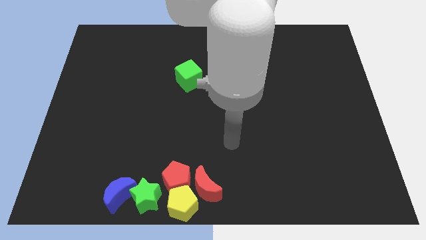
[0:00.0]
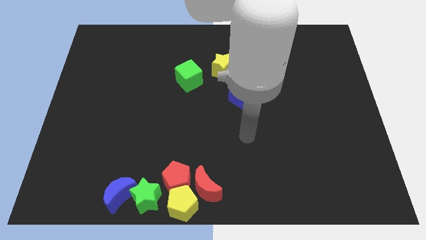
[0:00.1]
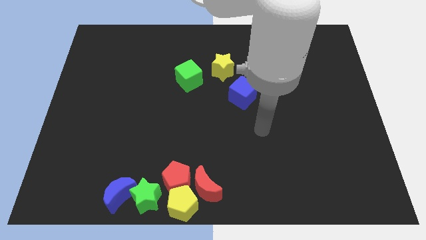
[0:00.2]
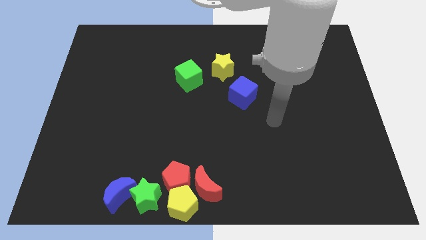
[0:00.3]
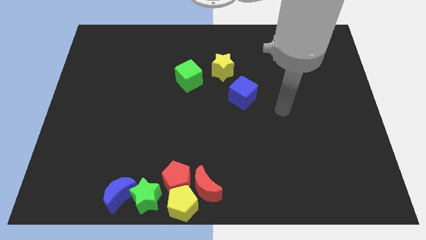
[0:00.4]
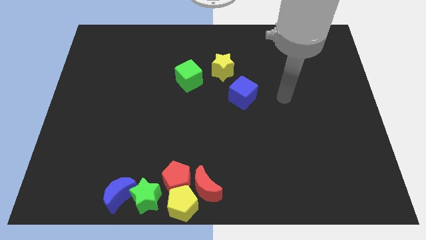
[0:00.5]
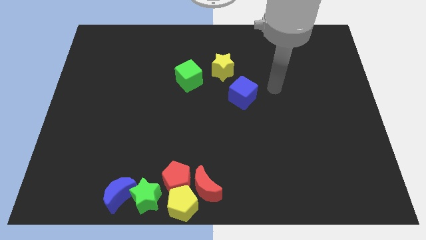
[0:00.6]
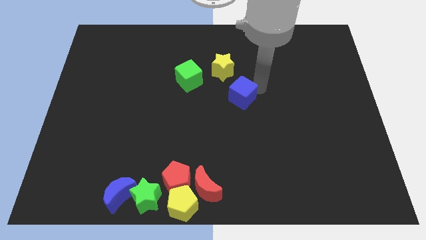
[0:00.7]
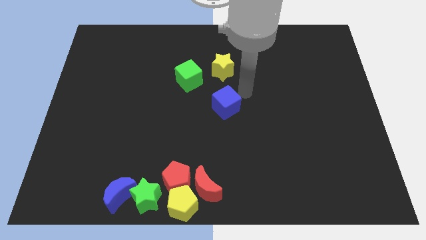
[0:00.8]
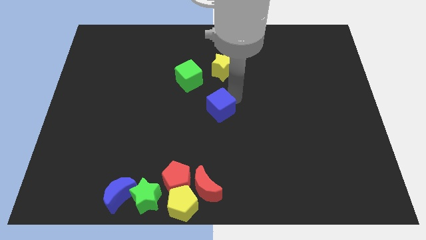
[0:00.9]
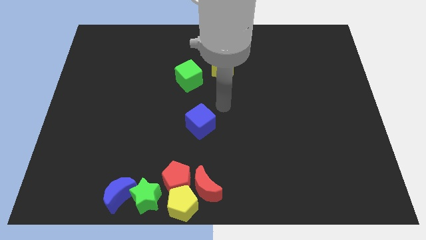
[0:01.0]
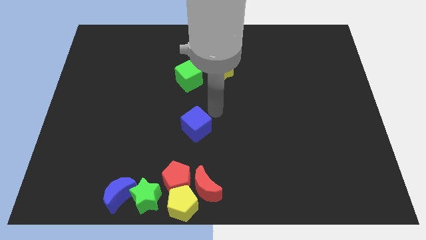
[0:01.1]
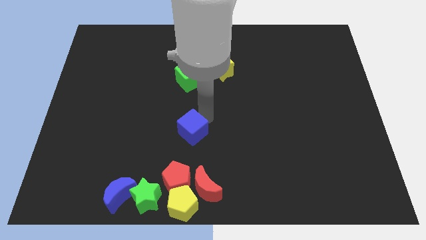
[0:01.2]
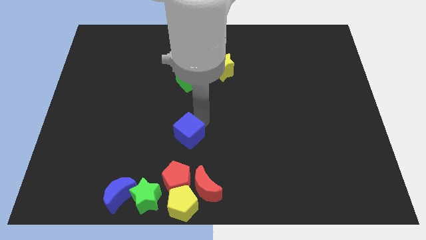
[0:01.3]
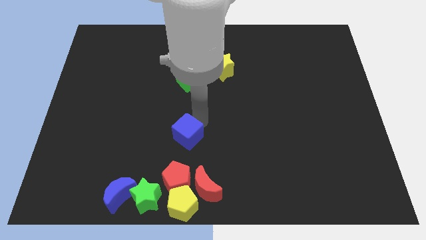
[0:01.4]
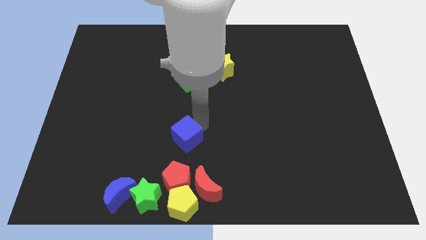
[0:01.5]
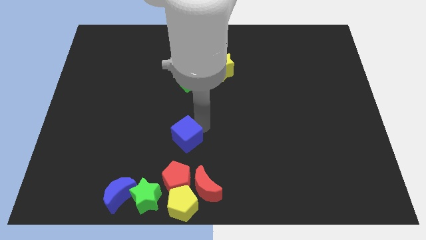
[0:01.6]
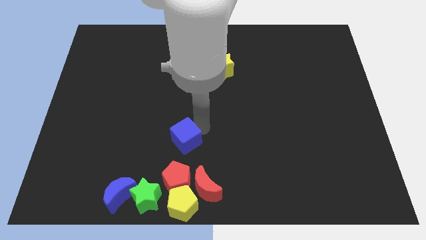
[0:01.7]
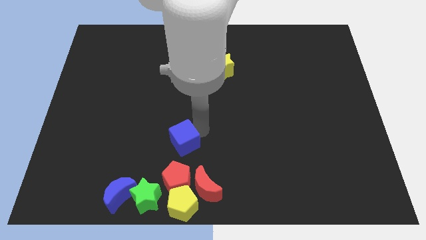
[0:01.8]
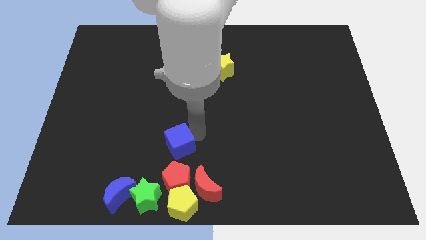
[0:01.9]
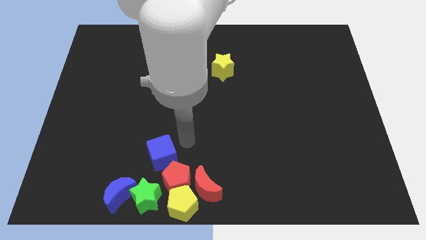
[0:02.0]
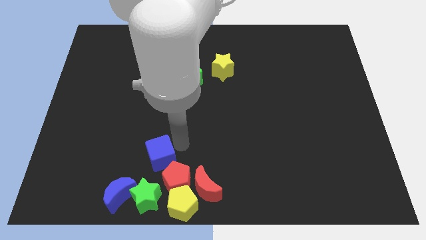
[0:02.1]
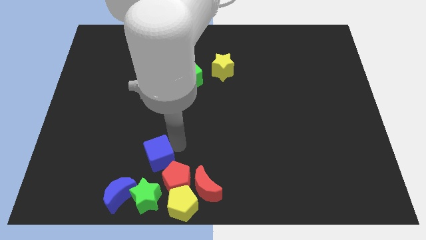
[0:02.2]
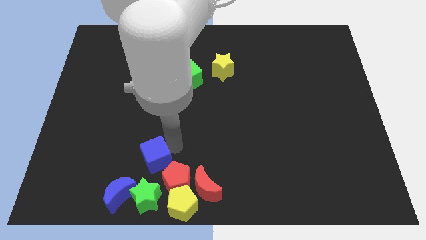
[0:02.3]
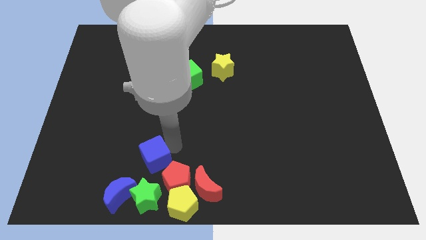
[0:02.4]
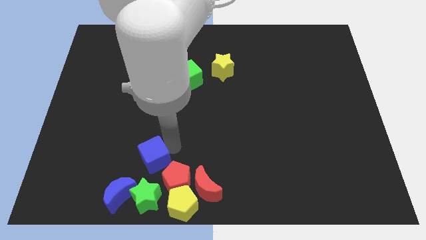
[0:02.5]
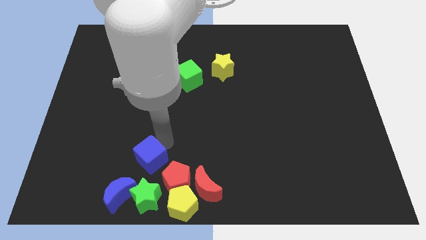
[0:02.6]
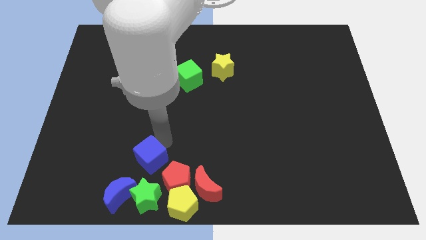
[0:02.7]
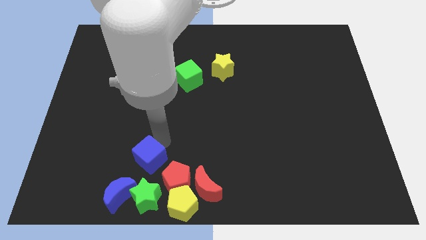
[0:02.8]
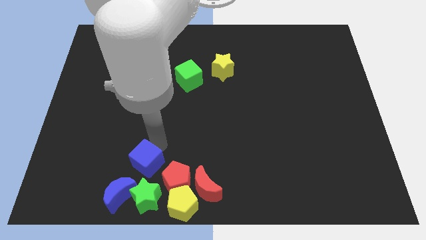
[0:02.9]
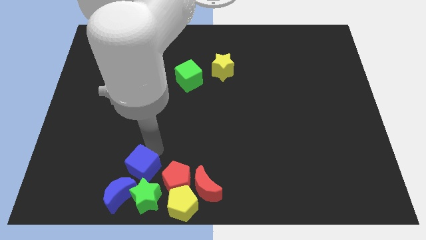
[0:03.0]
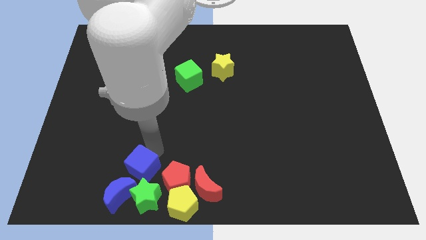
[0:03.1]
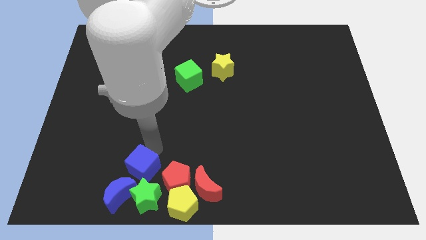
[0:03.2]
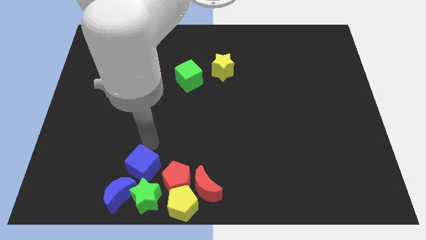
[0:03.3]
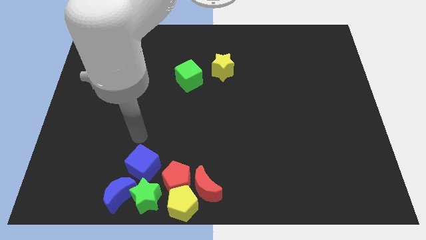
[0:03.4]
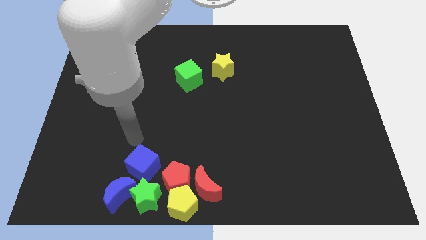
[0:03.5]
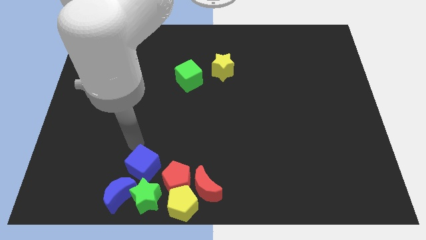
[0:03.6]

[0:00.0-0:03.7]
push blue cube towards bottom diagonally

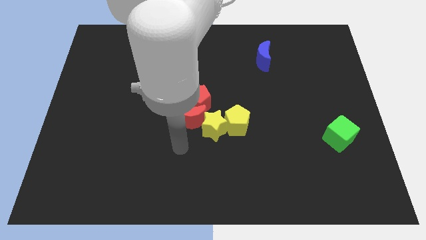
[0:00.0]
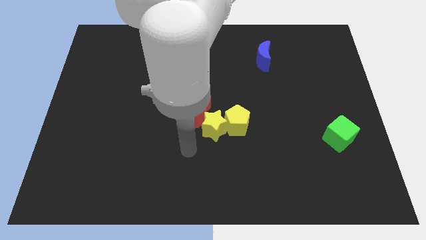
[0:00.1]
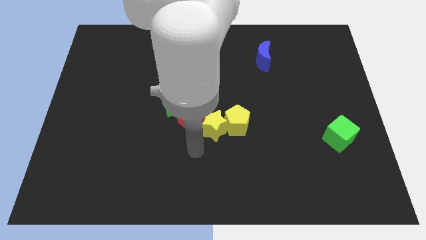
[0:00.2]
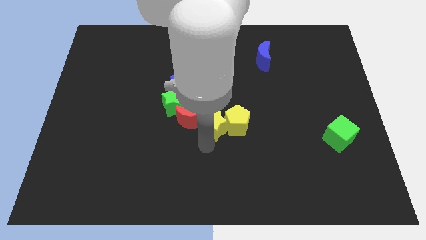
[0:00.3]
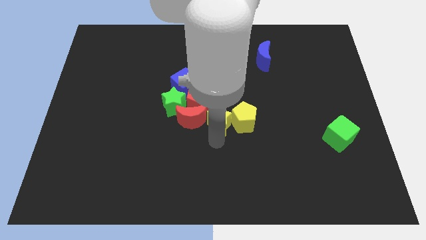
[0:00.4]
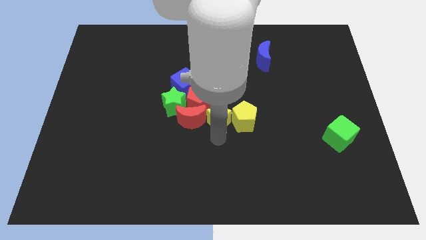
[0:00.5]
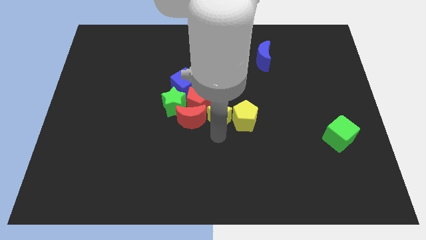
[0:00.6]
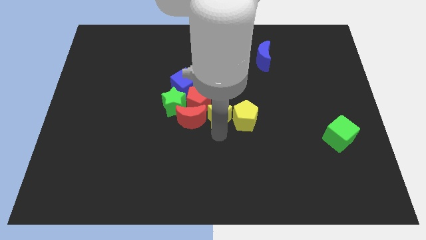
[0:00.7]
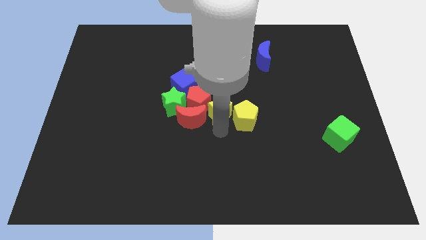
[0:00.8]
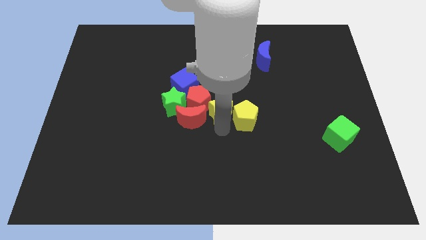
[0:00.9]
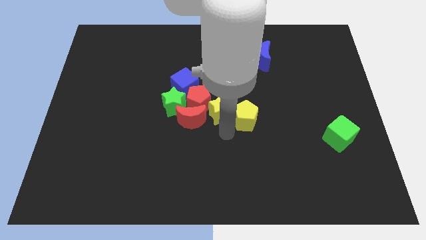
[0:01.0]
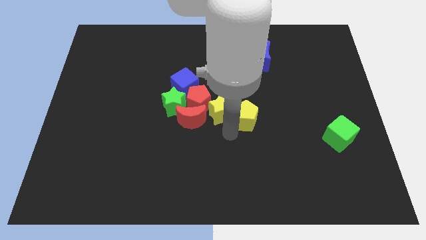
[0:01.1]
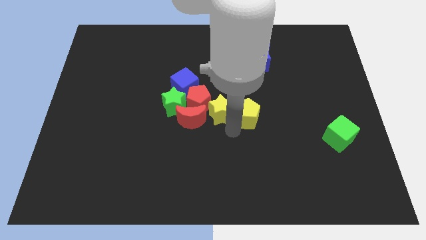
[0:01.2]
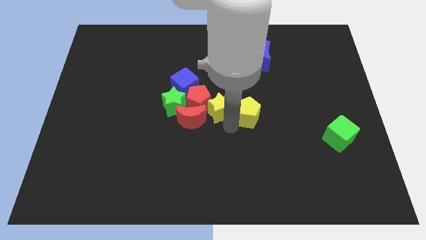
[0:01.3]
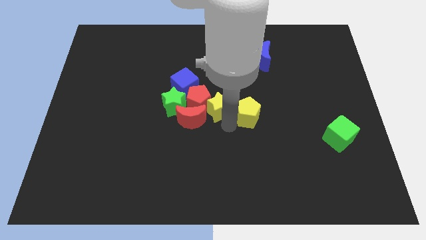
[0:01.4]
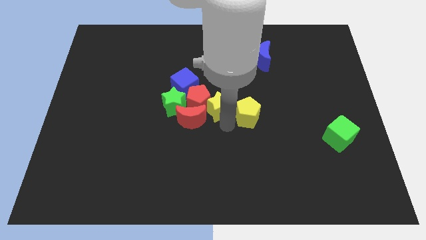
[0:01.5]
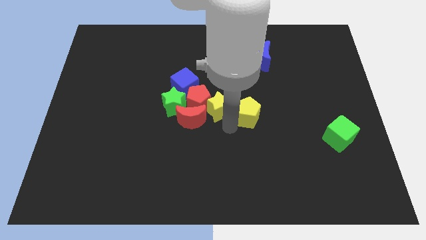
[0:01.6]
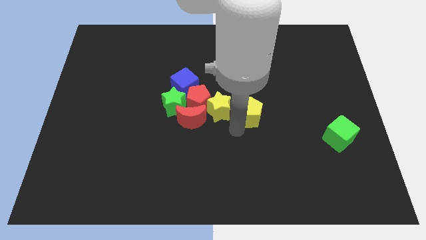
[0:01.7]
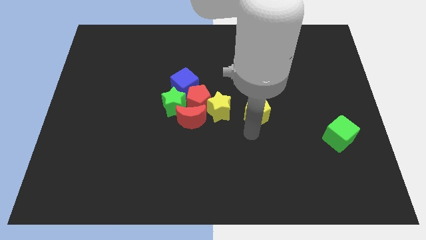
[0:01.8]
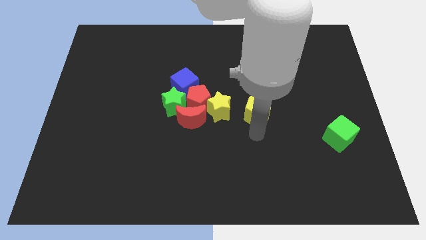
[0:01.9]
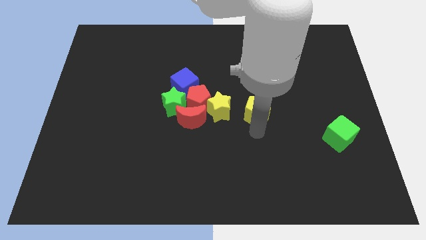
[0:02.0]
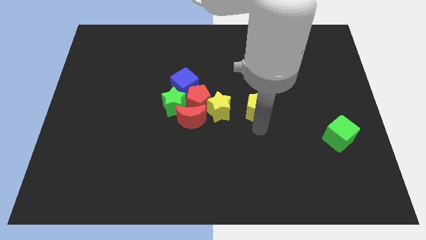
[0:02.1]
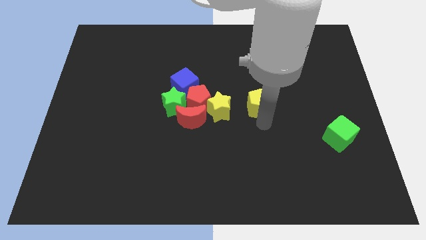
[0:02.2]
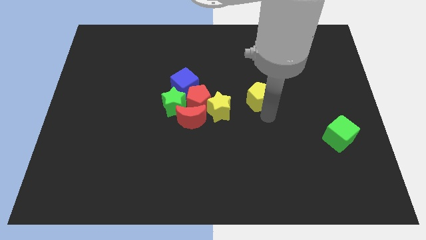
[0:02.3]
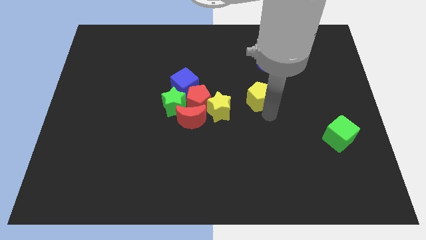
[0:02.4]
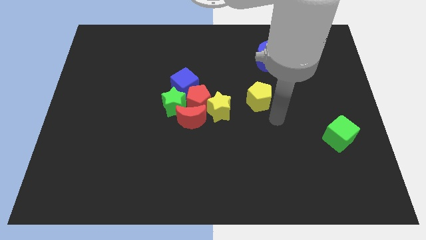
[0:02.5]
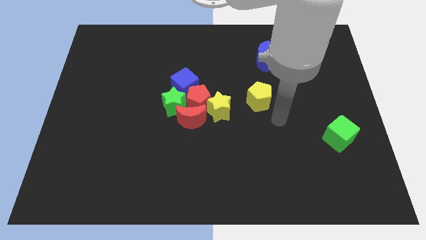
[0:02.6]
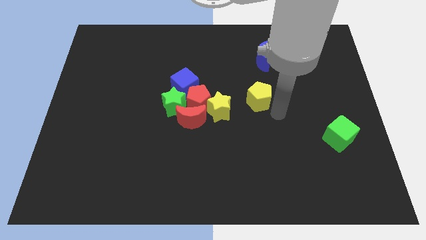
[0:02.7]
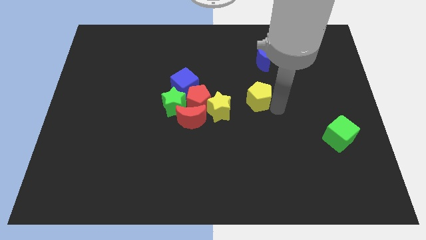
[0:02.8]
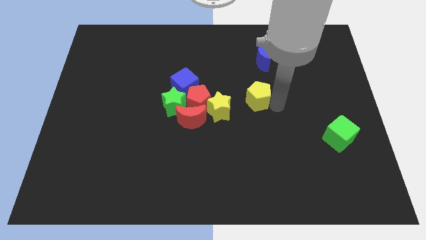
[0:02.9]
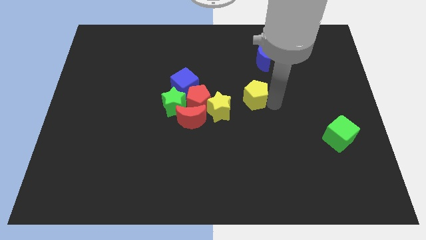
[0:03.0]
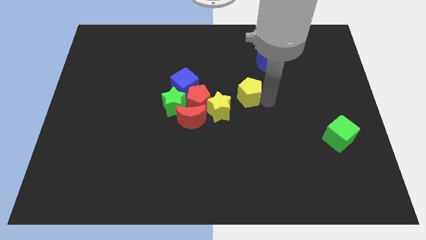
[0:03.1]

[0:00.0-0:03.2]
move the yellow pentagon to the top right side of the yellow star

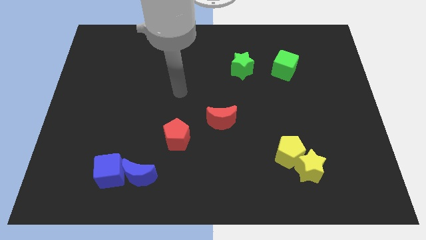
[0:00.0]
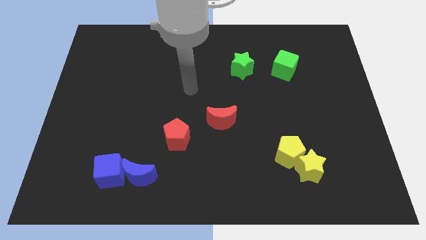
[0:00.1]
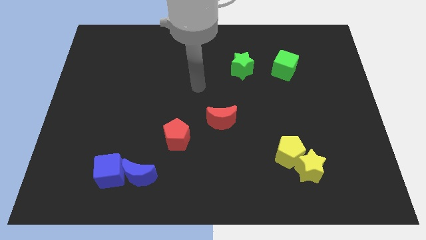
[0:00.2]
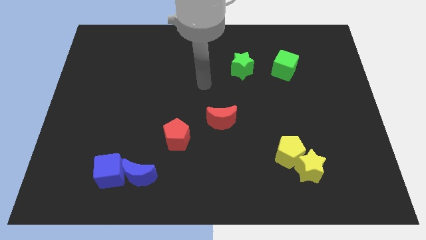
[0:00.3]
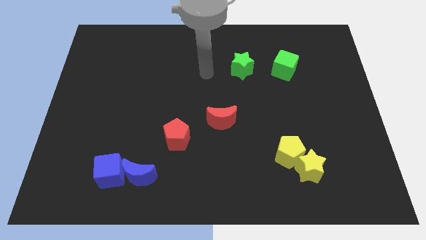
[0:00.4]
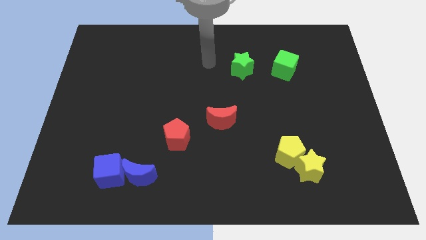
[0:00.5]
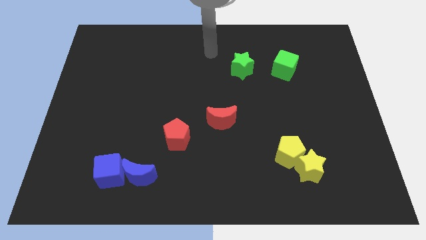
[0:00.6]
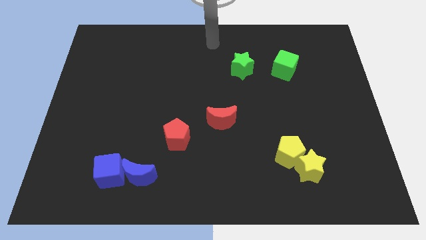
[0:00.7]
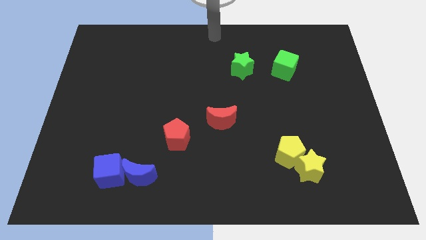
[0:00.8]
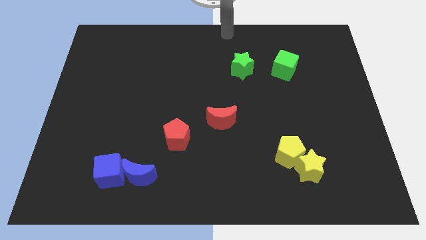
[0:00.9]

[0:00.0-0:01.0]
place arm at center top

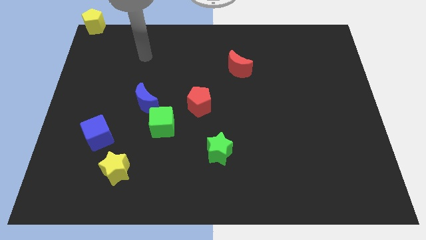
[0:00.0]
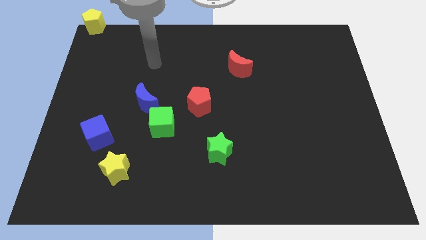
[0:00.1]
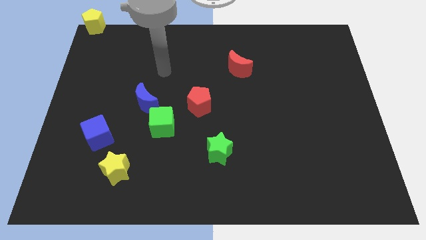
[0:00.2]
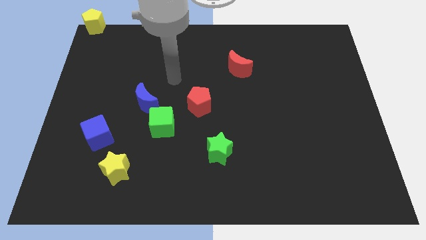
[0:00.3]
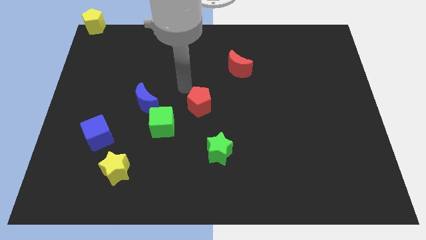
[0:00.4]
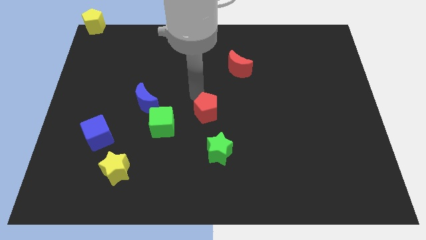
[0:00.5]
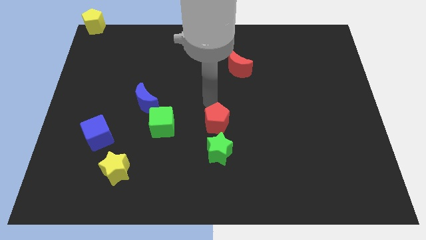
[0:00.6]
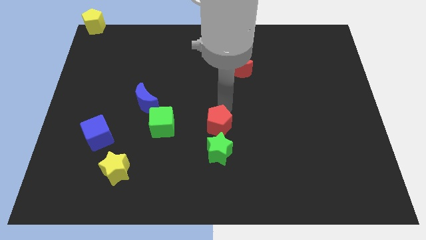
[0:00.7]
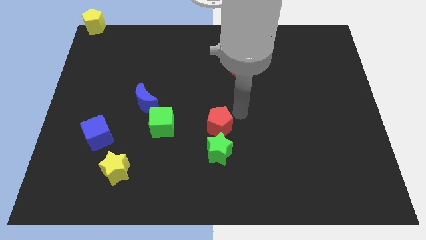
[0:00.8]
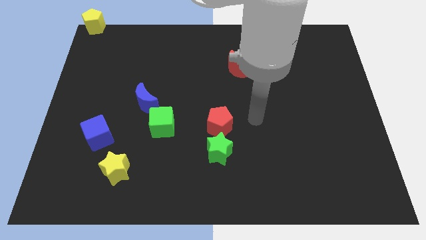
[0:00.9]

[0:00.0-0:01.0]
place red pentagon above green star

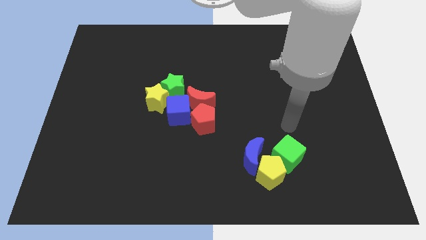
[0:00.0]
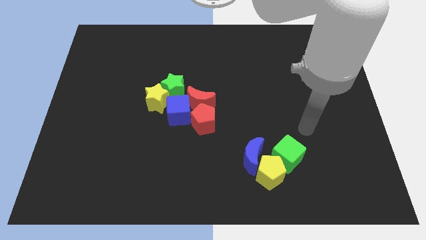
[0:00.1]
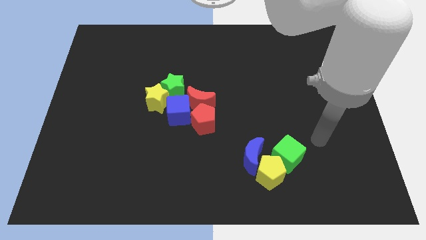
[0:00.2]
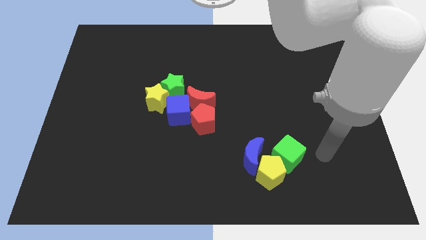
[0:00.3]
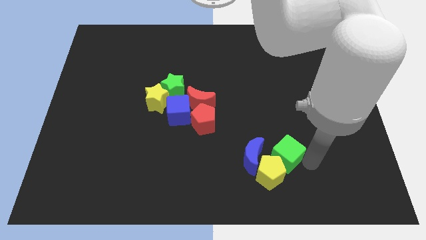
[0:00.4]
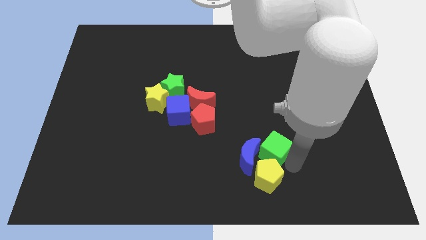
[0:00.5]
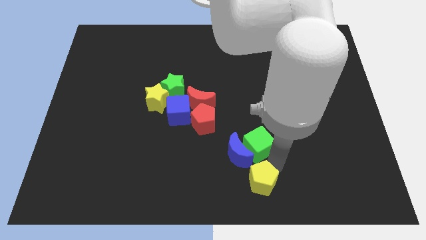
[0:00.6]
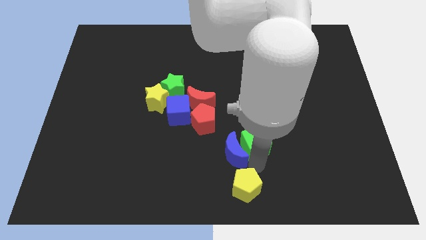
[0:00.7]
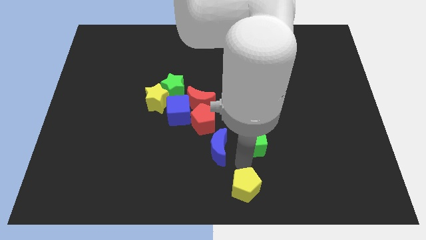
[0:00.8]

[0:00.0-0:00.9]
separate the blue crescentgreen cube and yellow pentagon apart
